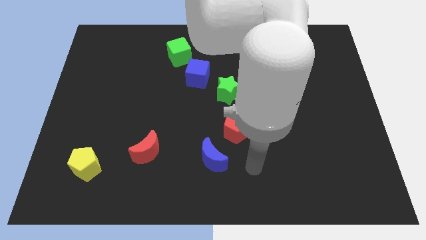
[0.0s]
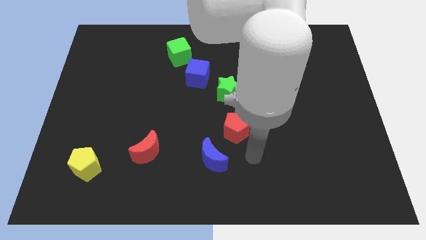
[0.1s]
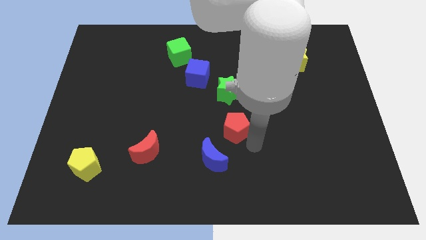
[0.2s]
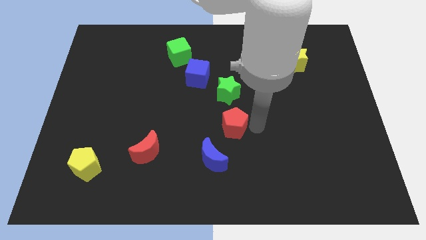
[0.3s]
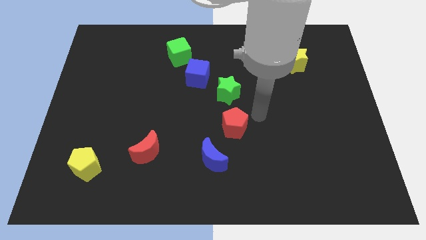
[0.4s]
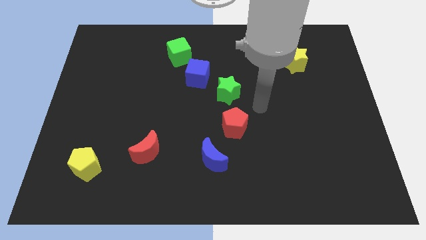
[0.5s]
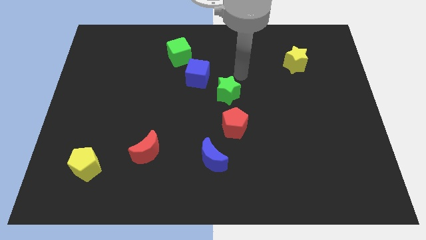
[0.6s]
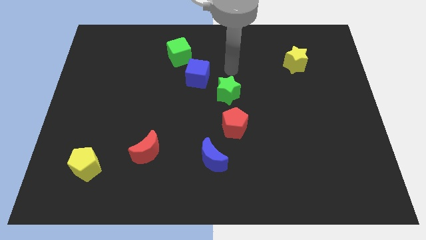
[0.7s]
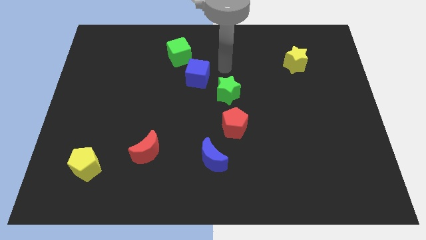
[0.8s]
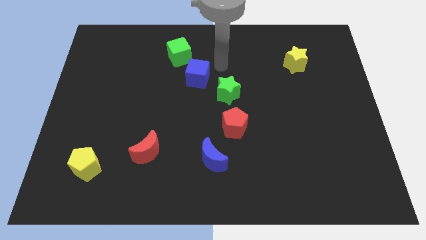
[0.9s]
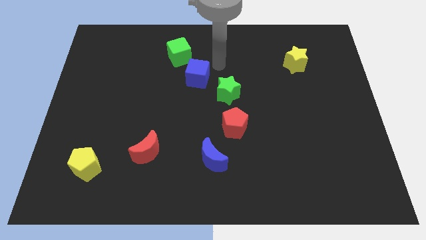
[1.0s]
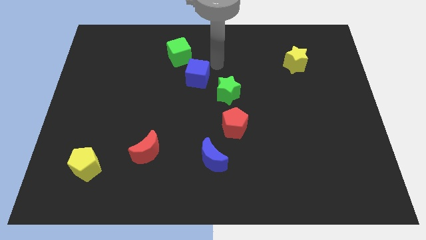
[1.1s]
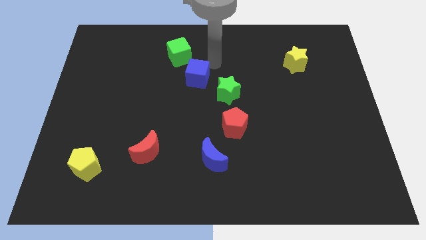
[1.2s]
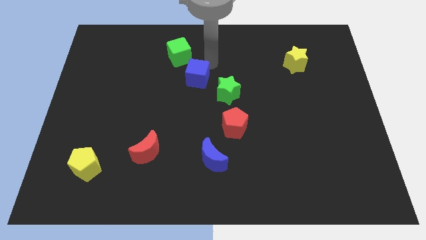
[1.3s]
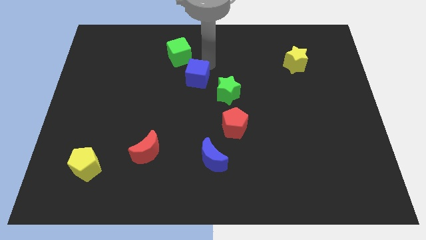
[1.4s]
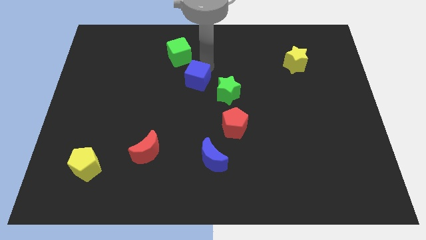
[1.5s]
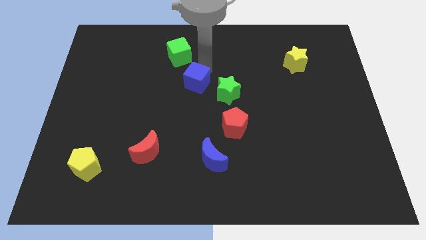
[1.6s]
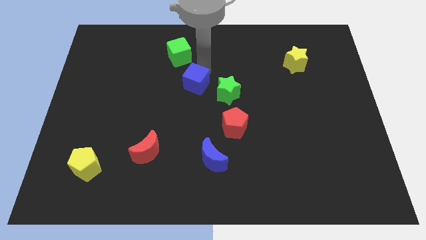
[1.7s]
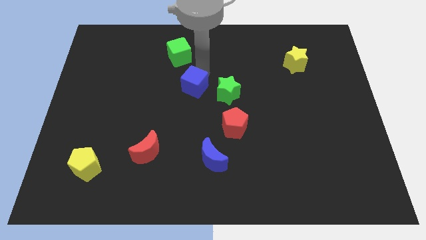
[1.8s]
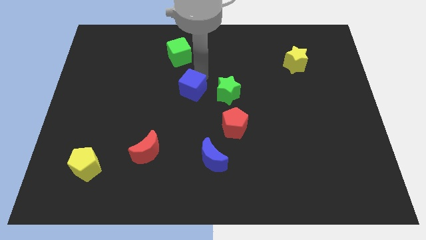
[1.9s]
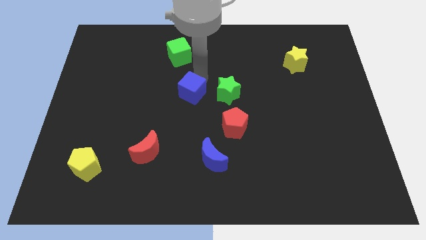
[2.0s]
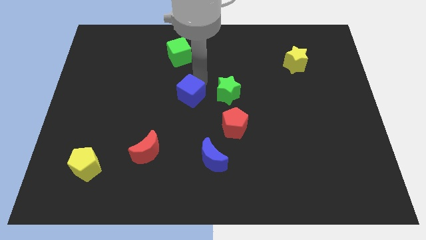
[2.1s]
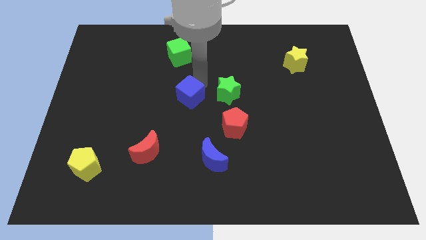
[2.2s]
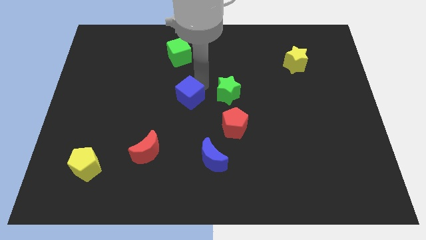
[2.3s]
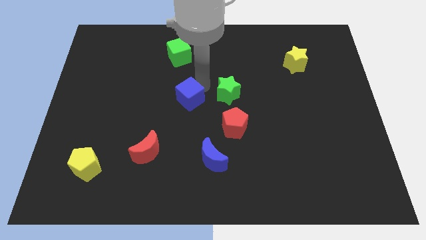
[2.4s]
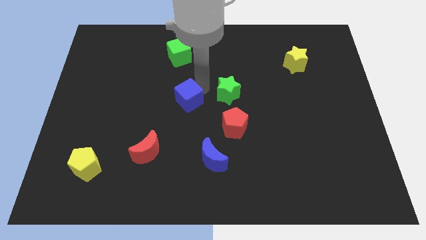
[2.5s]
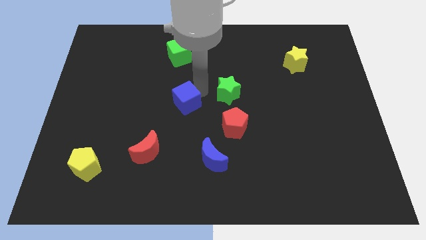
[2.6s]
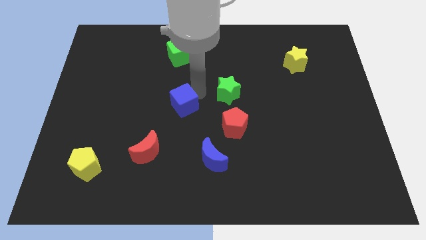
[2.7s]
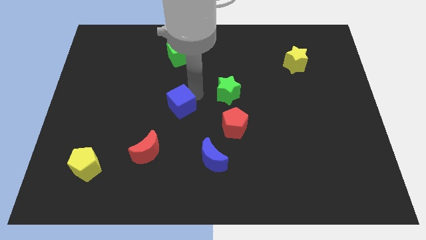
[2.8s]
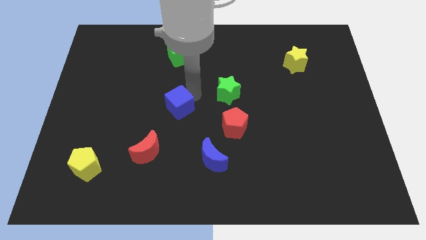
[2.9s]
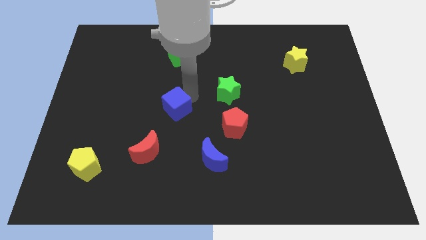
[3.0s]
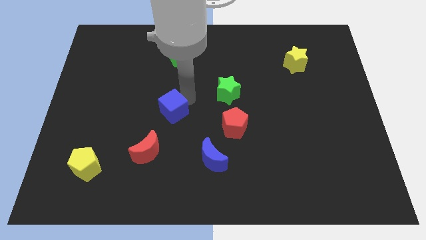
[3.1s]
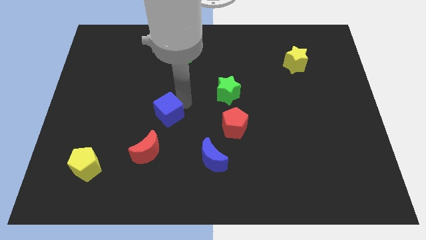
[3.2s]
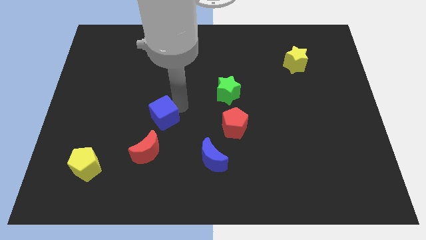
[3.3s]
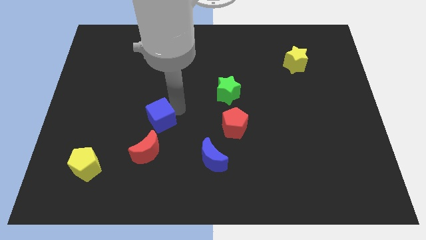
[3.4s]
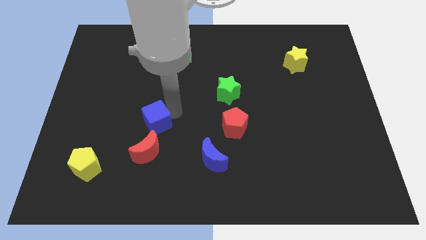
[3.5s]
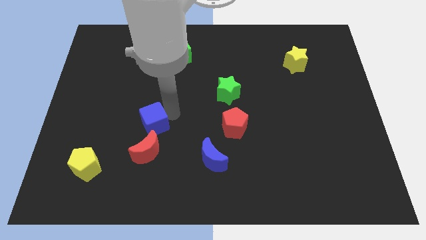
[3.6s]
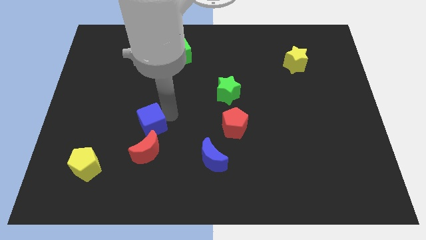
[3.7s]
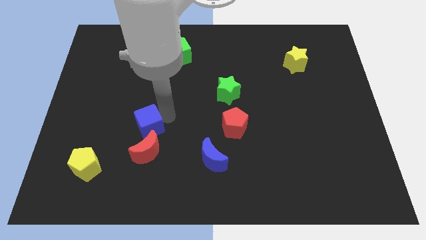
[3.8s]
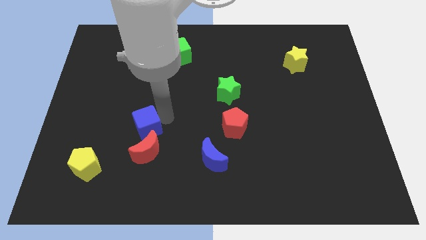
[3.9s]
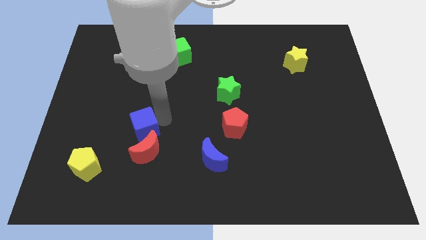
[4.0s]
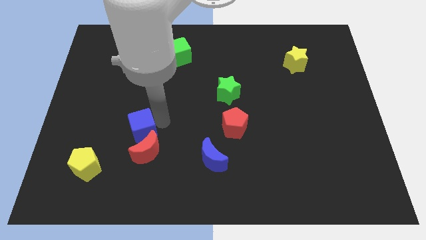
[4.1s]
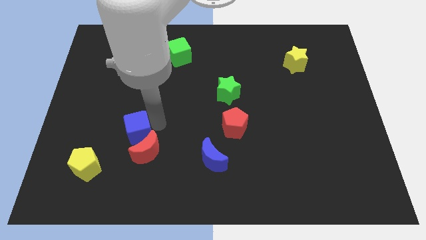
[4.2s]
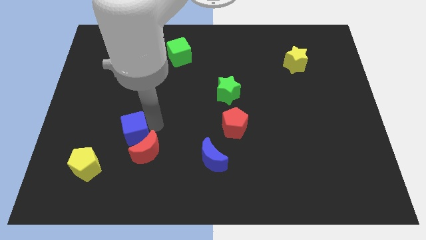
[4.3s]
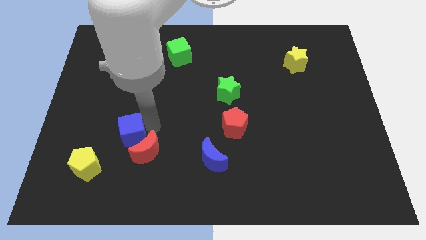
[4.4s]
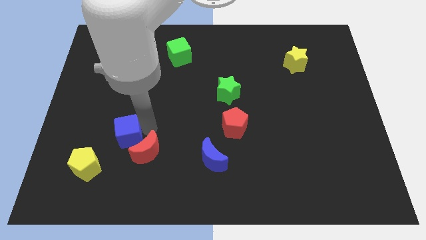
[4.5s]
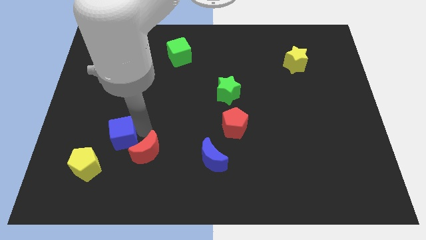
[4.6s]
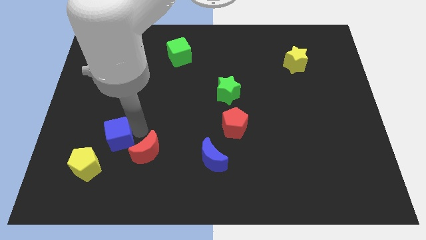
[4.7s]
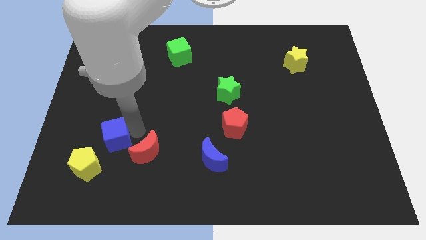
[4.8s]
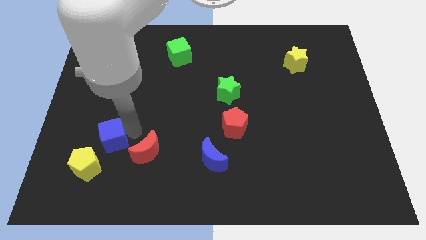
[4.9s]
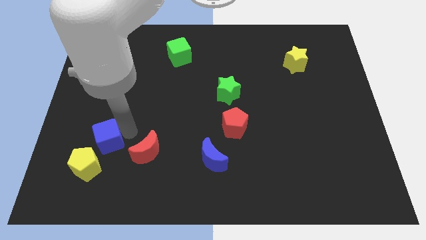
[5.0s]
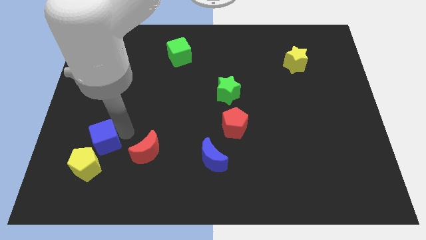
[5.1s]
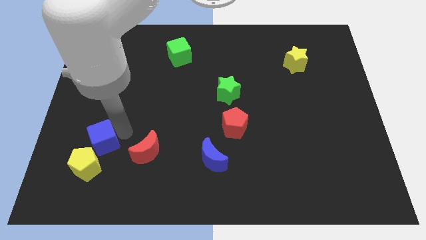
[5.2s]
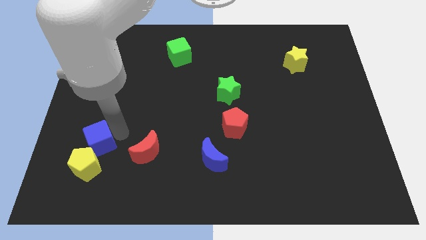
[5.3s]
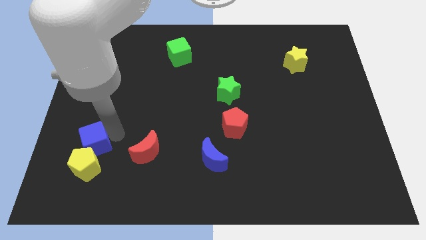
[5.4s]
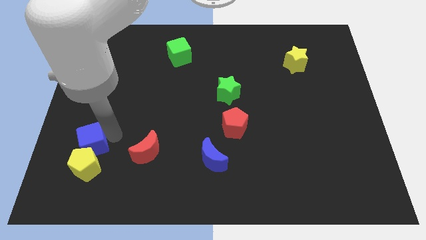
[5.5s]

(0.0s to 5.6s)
put the blue cube towards the yellow pentagon

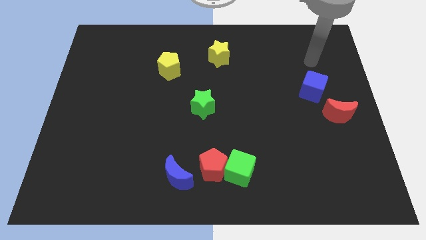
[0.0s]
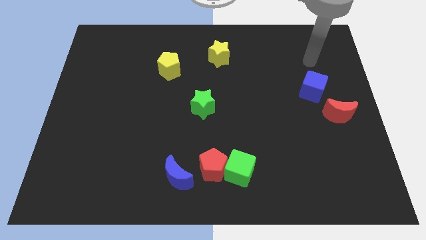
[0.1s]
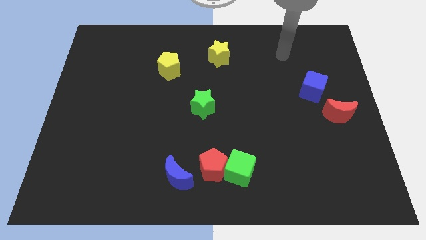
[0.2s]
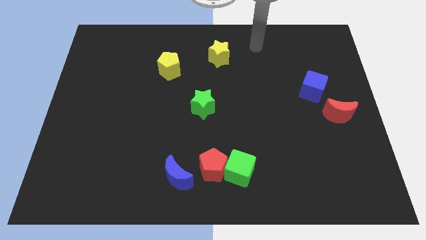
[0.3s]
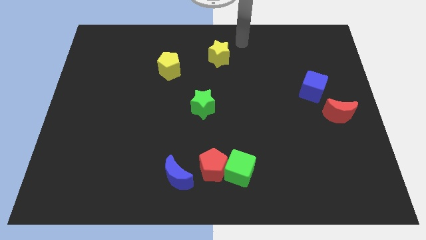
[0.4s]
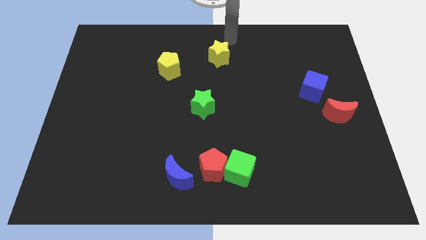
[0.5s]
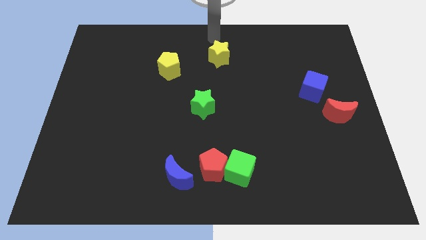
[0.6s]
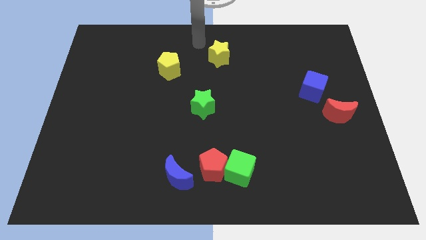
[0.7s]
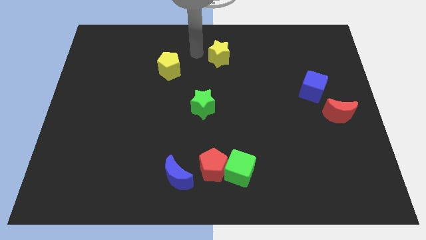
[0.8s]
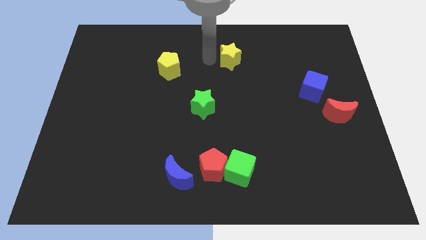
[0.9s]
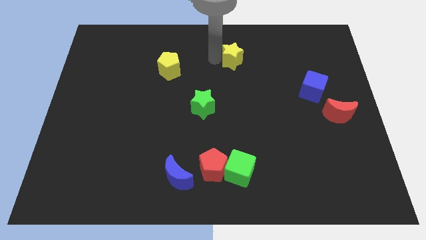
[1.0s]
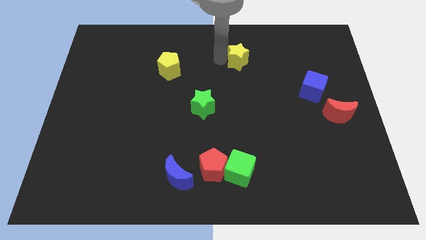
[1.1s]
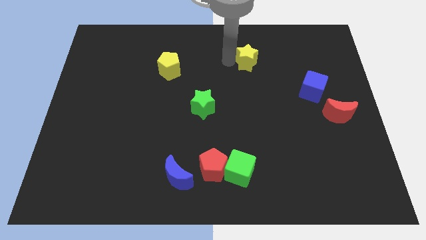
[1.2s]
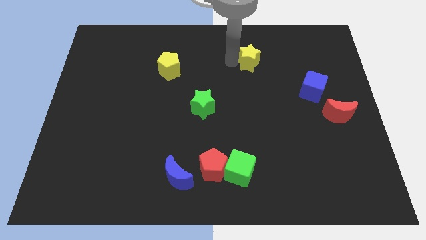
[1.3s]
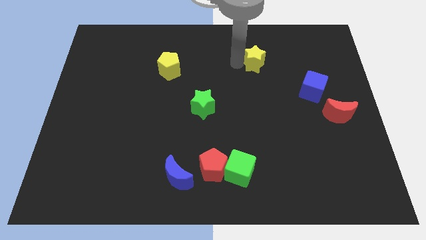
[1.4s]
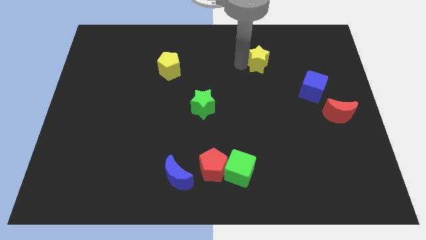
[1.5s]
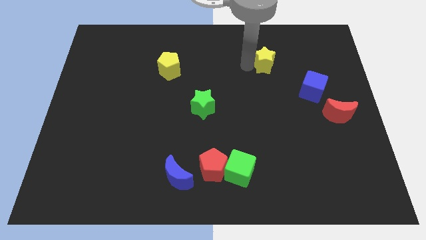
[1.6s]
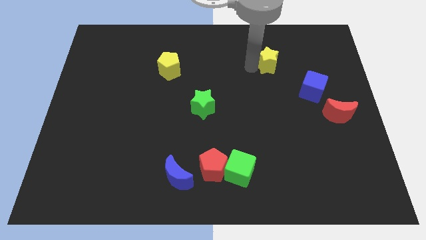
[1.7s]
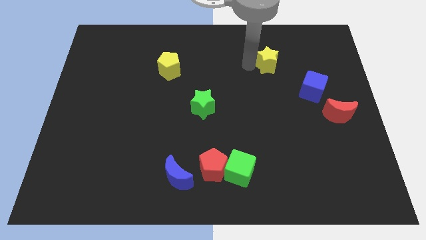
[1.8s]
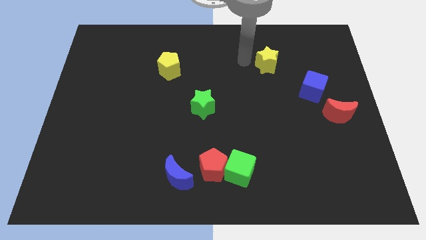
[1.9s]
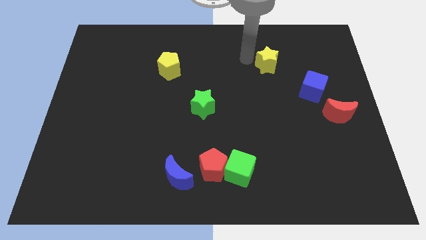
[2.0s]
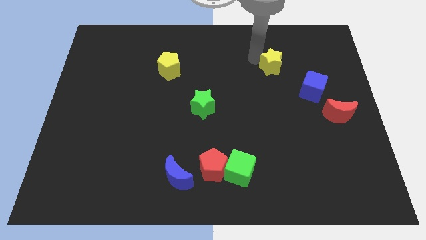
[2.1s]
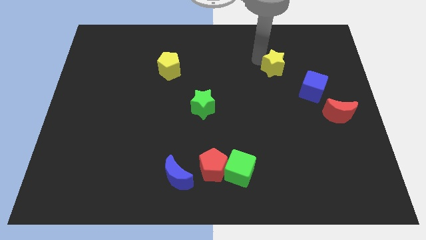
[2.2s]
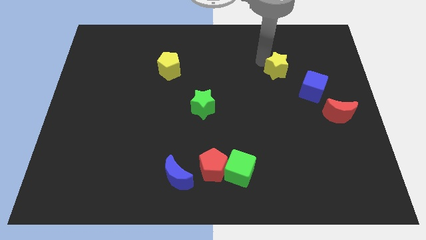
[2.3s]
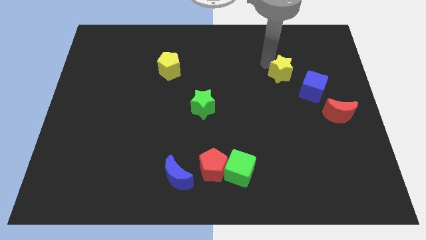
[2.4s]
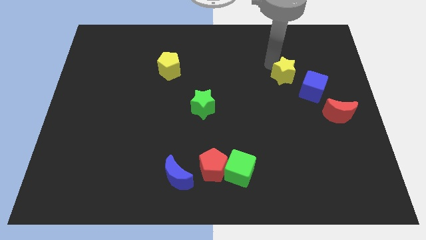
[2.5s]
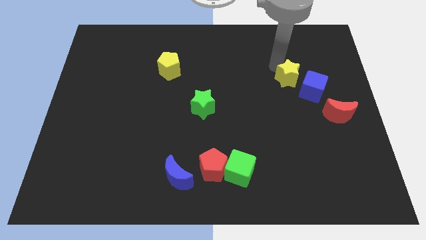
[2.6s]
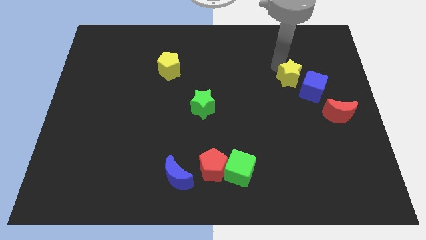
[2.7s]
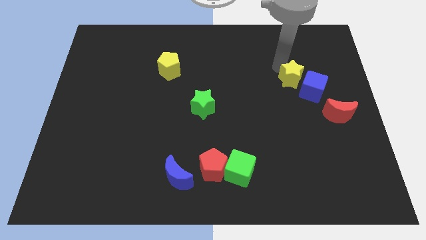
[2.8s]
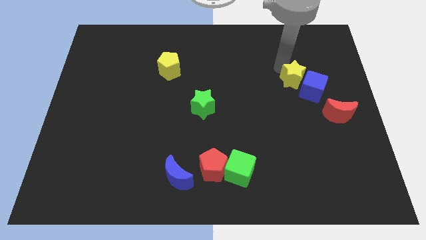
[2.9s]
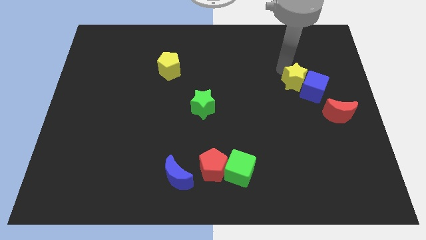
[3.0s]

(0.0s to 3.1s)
put the yellow star next to the blue cube

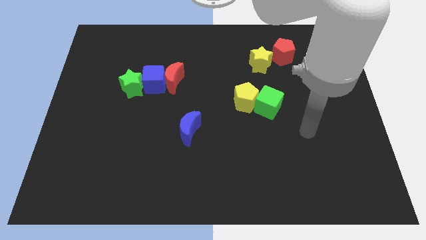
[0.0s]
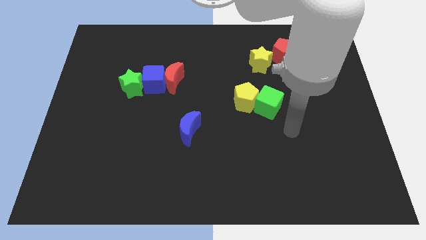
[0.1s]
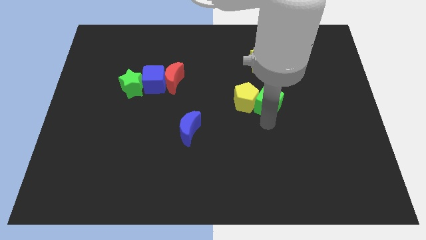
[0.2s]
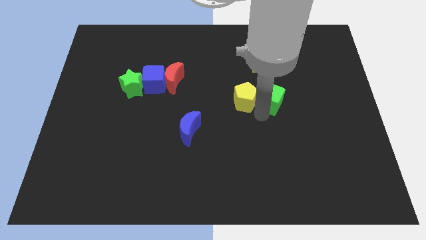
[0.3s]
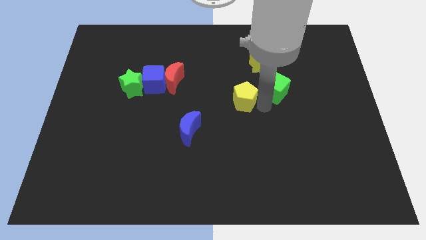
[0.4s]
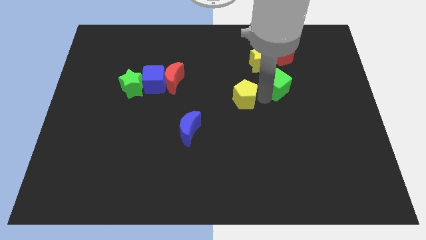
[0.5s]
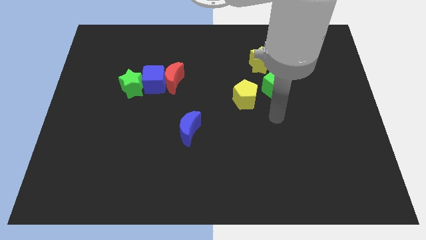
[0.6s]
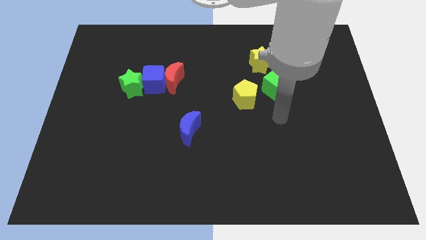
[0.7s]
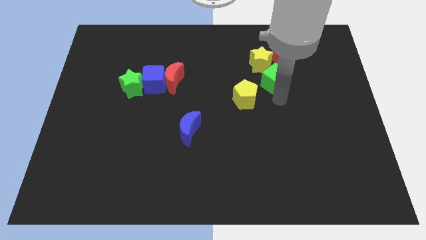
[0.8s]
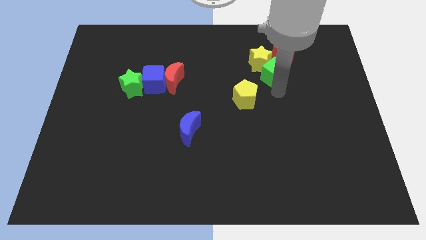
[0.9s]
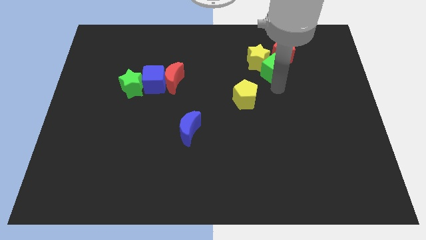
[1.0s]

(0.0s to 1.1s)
move the green cube towards the yellow star
